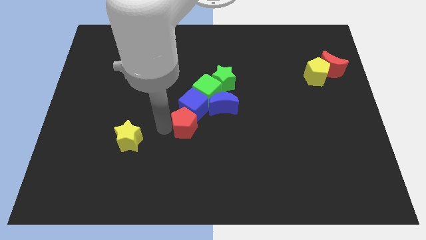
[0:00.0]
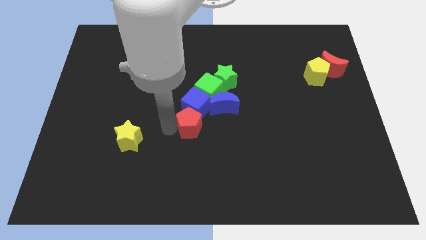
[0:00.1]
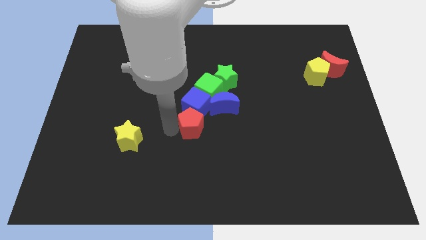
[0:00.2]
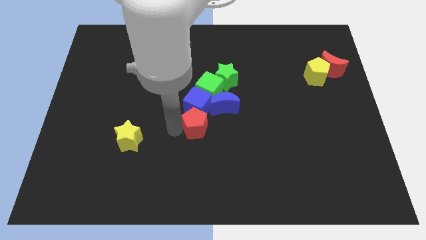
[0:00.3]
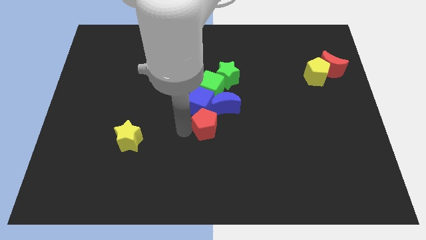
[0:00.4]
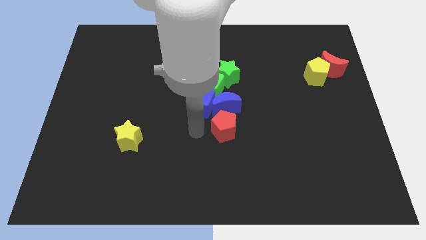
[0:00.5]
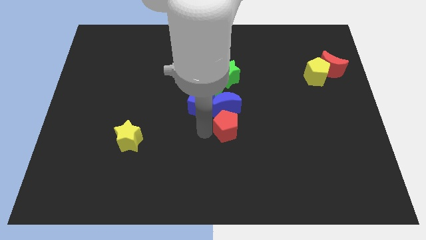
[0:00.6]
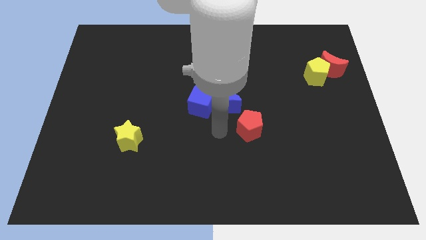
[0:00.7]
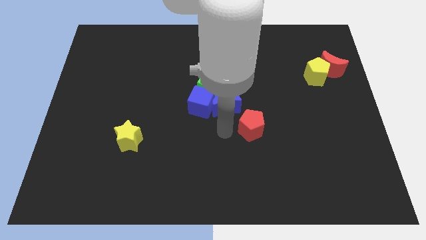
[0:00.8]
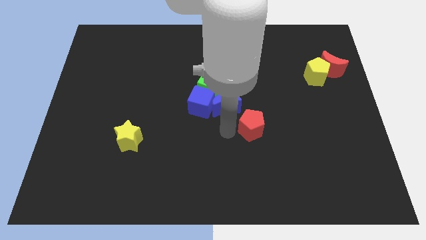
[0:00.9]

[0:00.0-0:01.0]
separate the red pentagon from the group of blocks

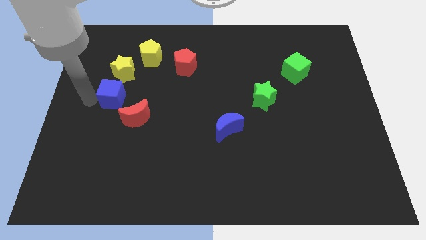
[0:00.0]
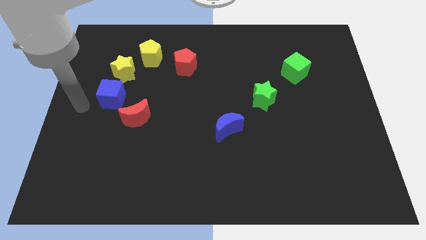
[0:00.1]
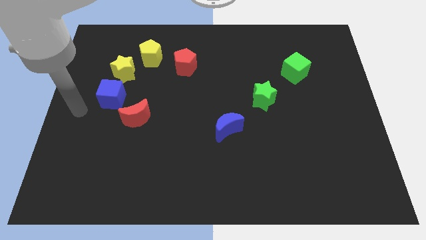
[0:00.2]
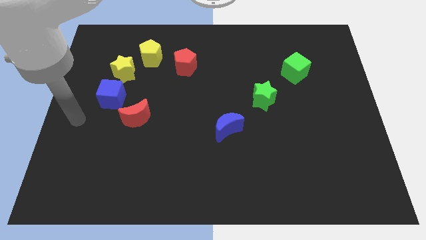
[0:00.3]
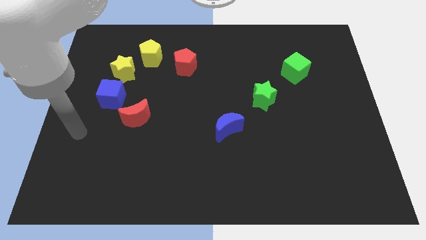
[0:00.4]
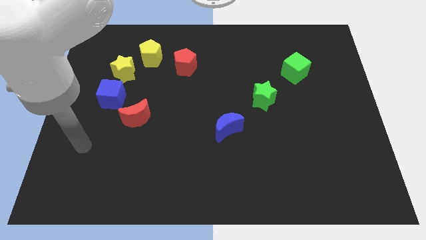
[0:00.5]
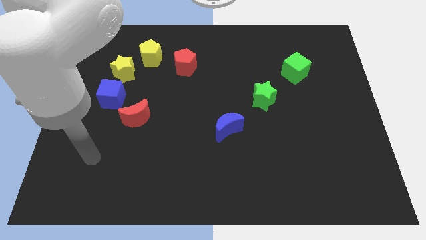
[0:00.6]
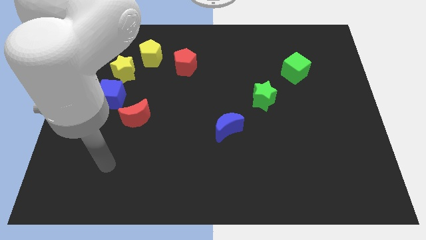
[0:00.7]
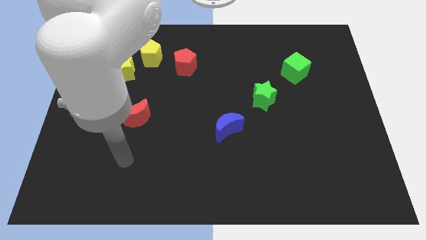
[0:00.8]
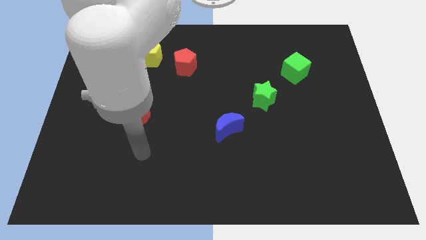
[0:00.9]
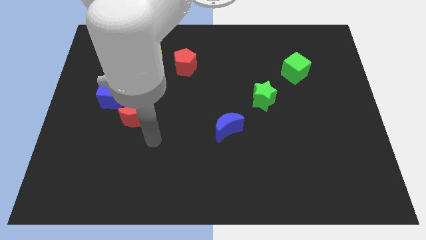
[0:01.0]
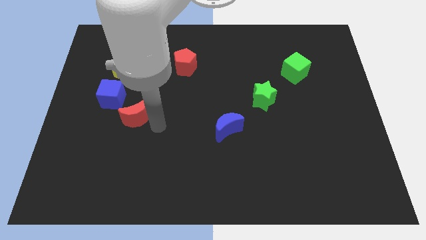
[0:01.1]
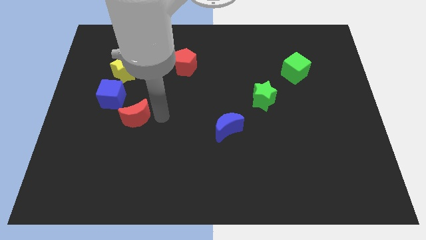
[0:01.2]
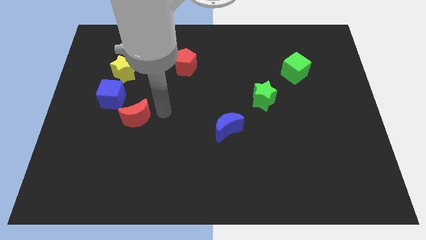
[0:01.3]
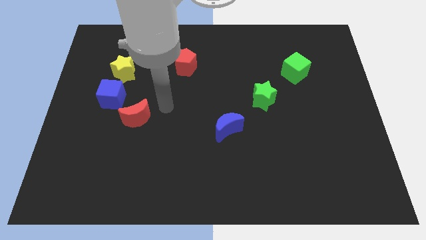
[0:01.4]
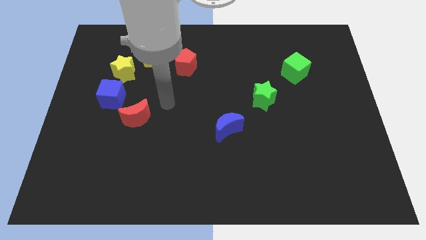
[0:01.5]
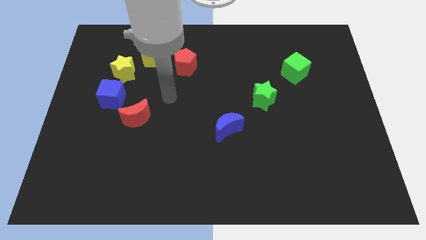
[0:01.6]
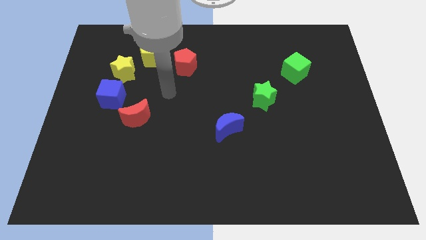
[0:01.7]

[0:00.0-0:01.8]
point your arm between red moon and red pentagon

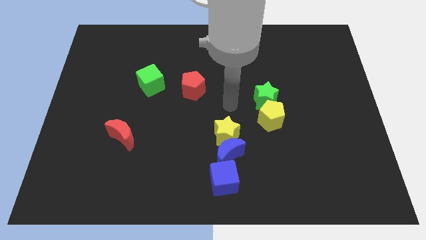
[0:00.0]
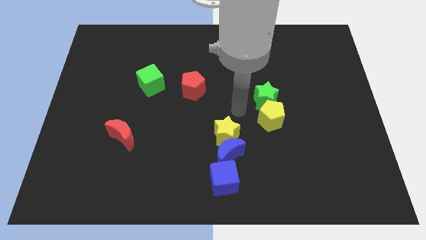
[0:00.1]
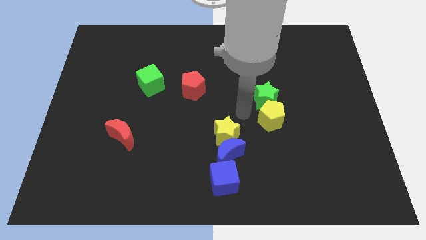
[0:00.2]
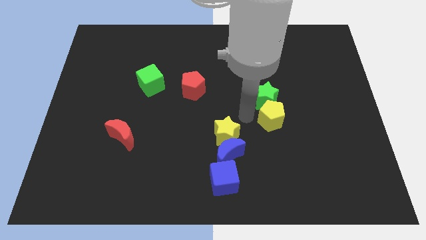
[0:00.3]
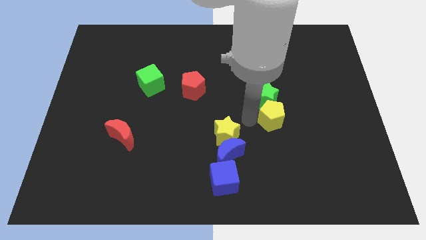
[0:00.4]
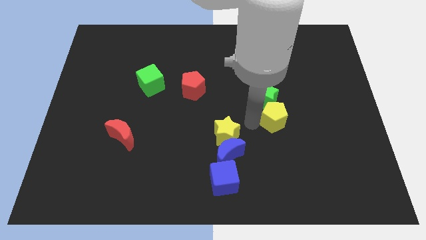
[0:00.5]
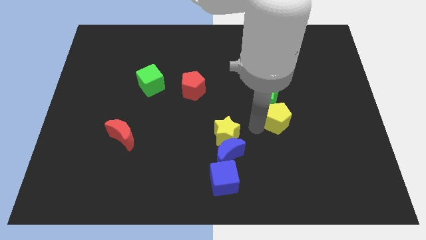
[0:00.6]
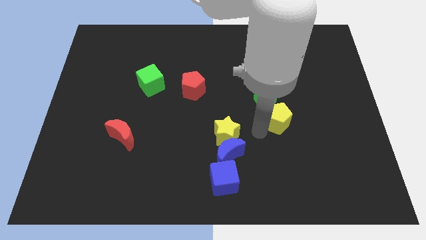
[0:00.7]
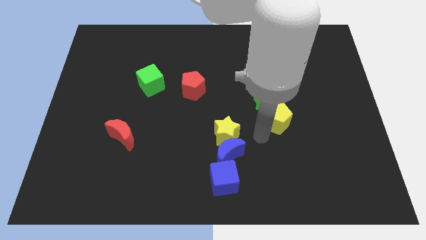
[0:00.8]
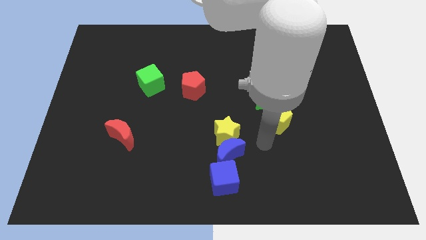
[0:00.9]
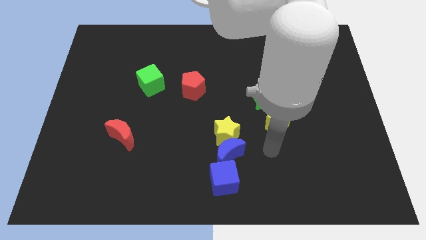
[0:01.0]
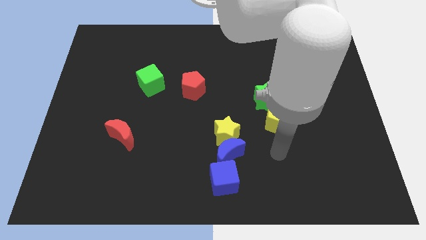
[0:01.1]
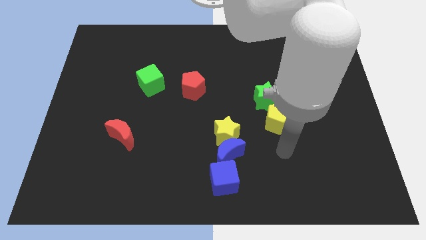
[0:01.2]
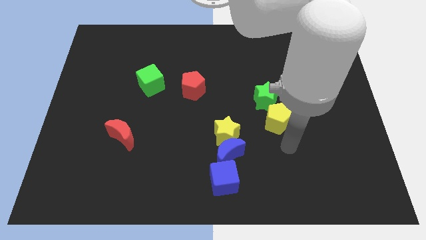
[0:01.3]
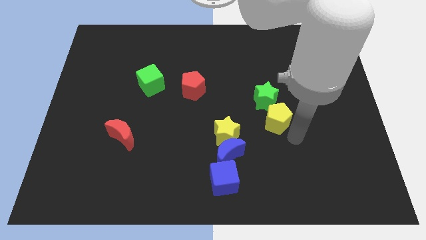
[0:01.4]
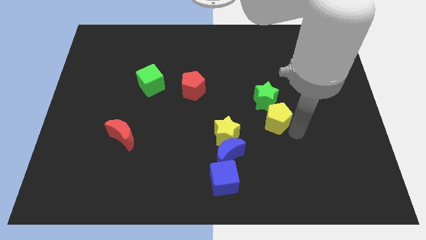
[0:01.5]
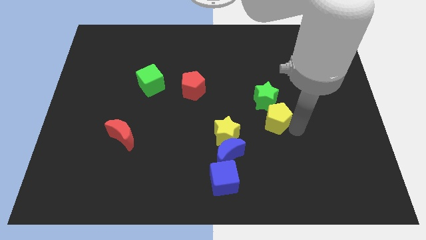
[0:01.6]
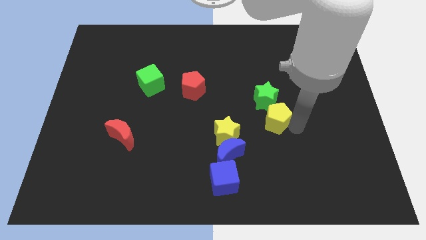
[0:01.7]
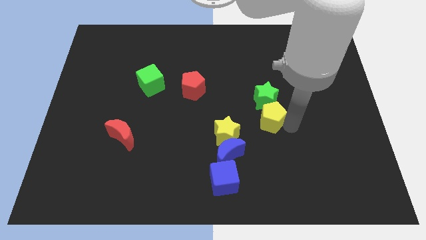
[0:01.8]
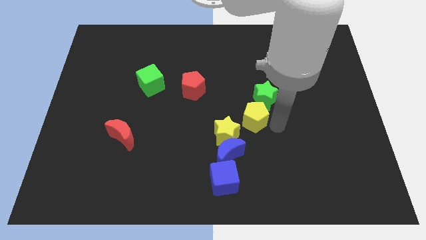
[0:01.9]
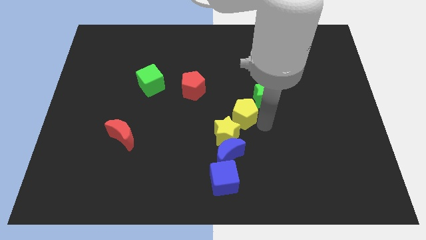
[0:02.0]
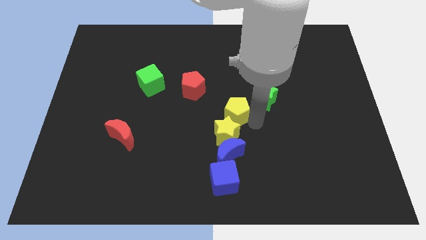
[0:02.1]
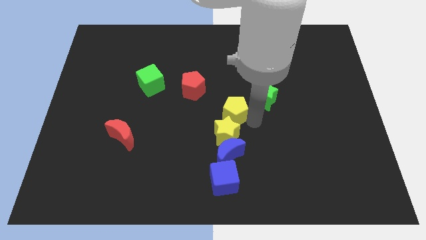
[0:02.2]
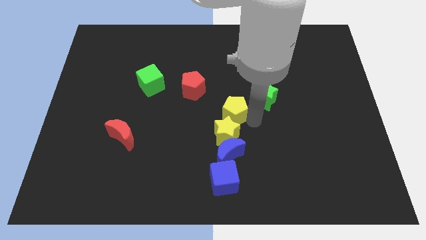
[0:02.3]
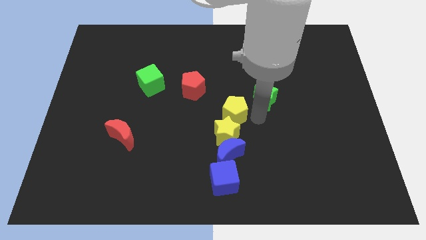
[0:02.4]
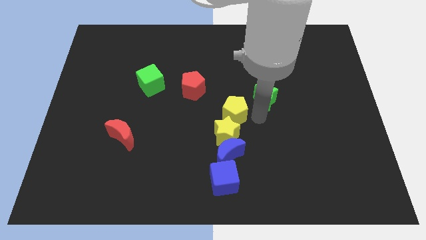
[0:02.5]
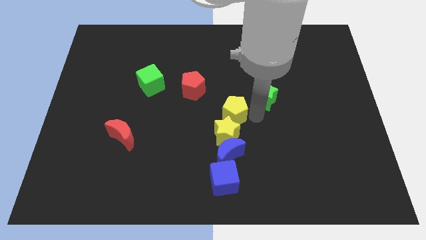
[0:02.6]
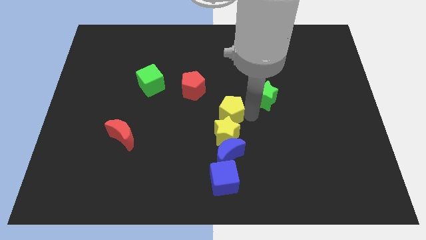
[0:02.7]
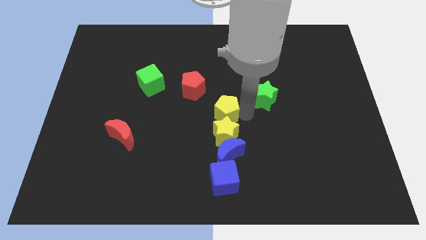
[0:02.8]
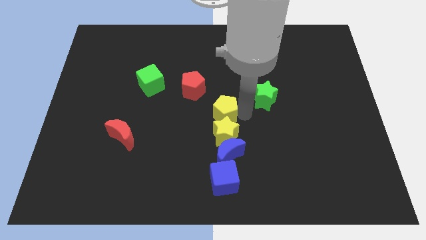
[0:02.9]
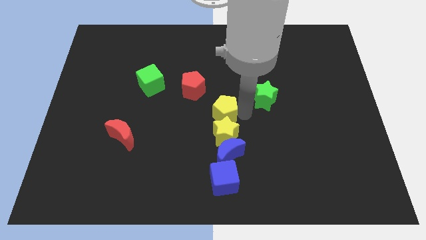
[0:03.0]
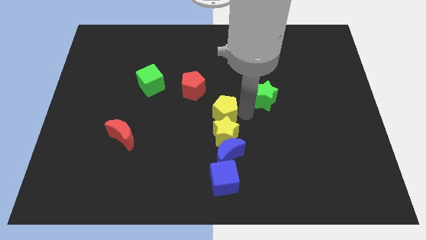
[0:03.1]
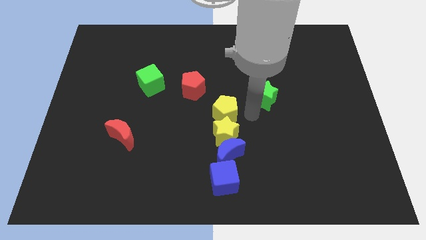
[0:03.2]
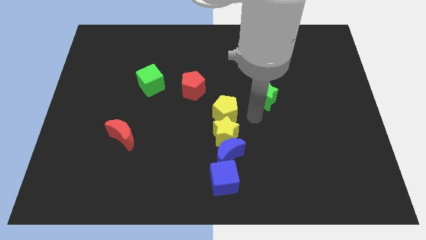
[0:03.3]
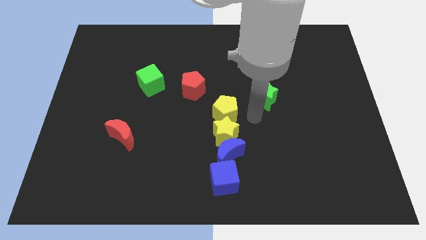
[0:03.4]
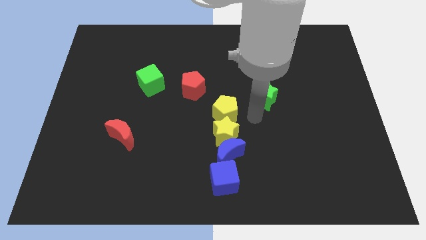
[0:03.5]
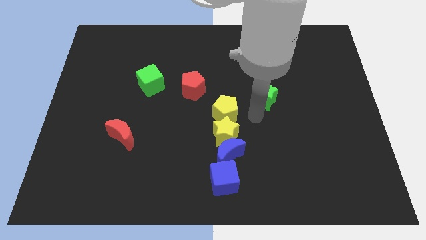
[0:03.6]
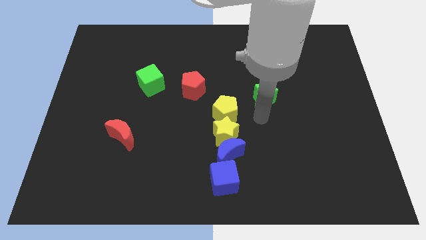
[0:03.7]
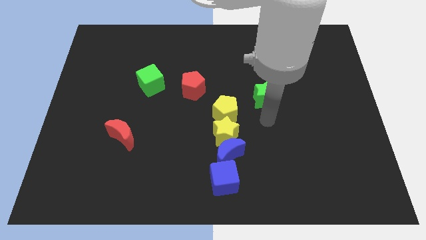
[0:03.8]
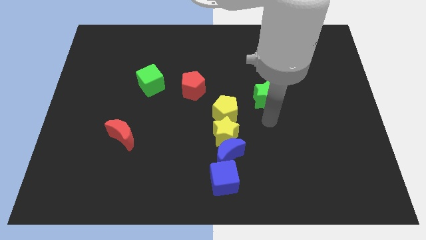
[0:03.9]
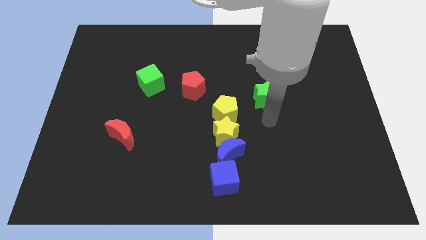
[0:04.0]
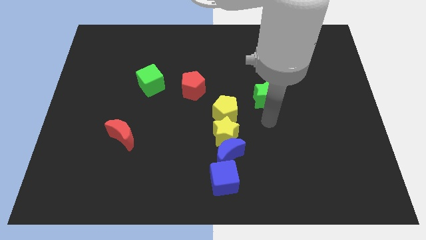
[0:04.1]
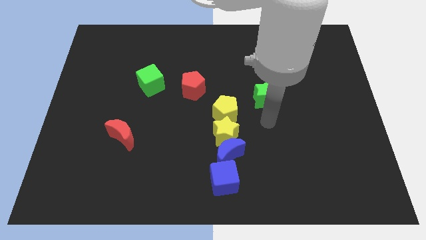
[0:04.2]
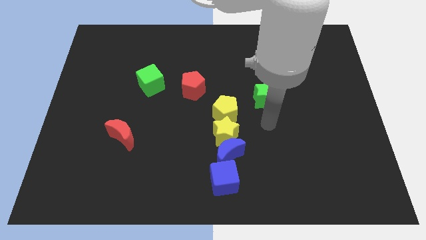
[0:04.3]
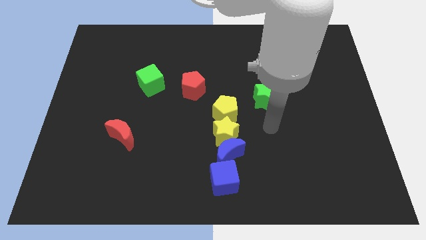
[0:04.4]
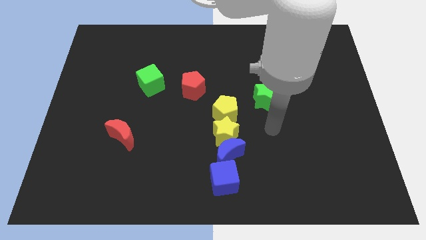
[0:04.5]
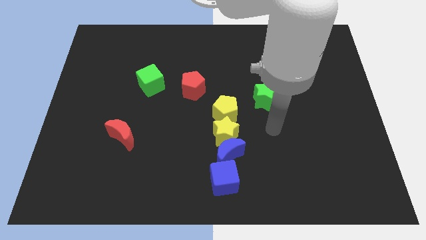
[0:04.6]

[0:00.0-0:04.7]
move the yellow pentagon to the top of the yellow star

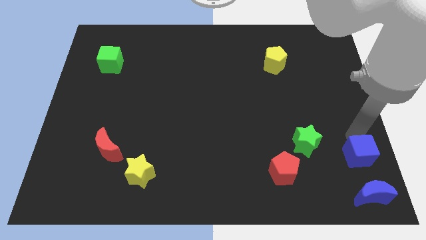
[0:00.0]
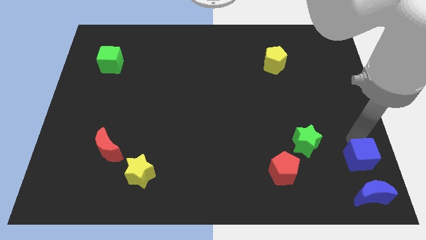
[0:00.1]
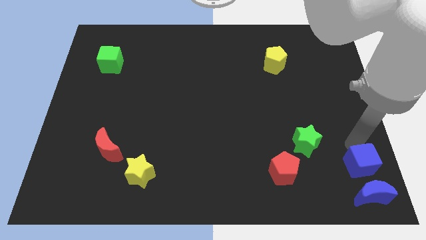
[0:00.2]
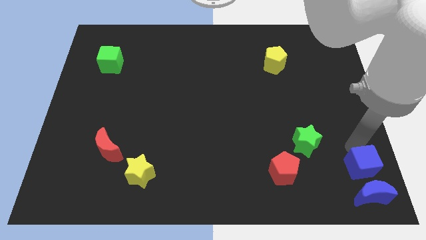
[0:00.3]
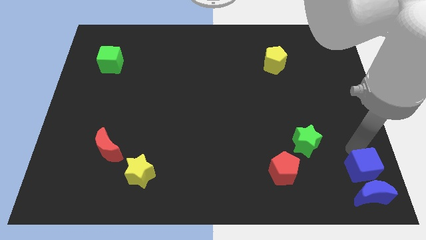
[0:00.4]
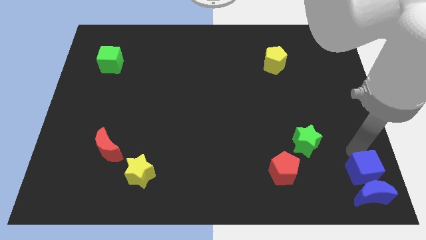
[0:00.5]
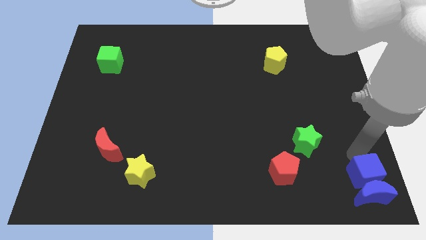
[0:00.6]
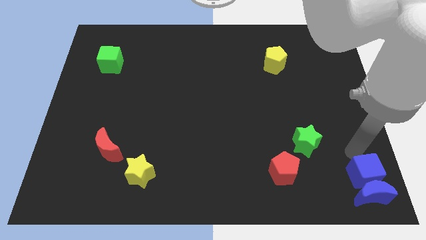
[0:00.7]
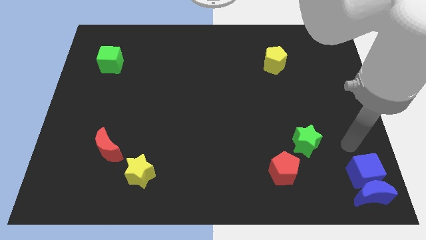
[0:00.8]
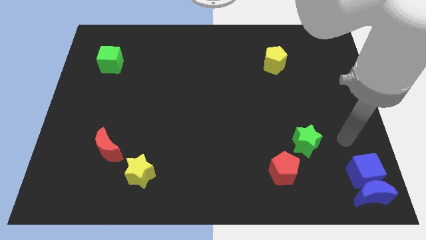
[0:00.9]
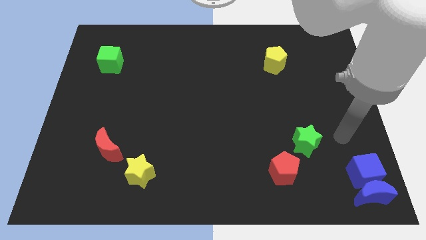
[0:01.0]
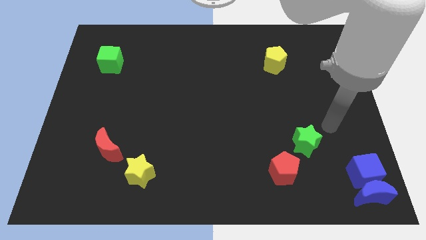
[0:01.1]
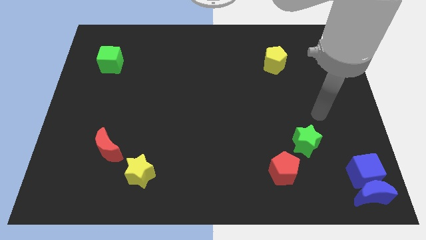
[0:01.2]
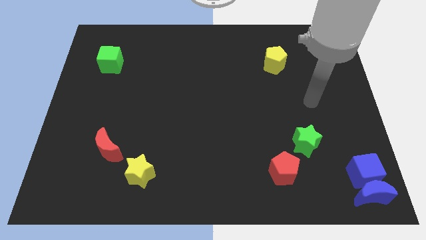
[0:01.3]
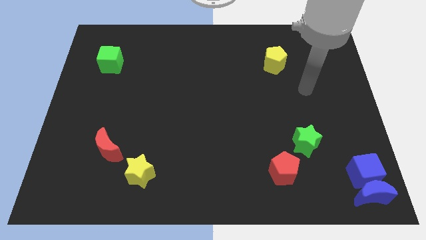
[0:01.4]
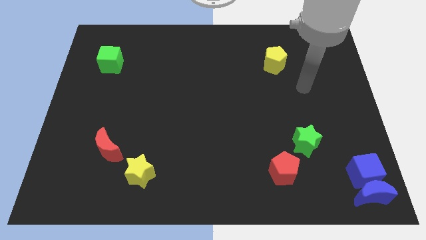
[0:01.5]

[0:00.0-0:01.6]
push blue cube into blue moon
